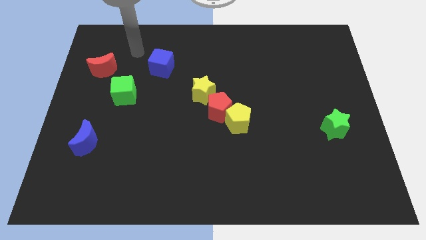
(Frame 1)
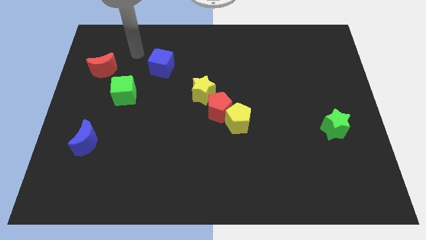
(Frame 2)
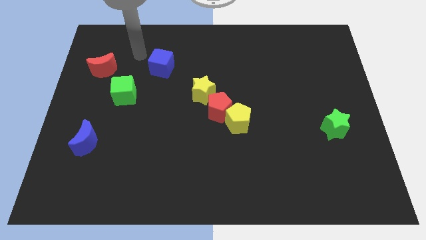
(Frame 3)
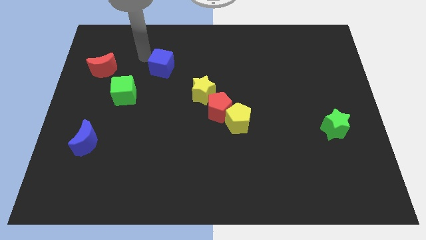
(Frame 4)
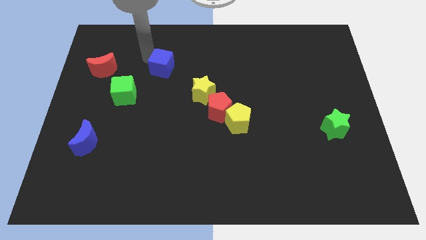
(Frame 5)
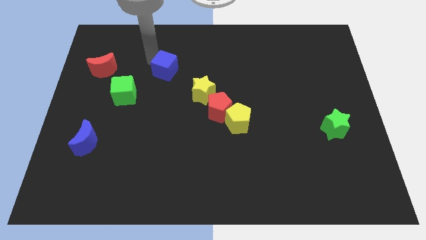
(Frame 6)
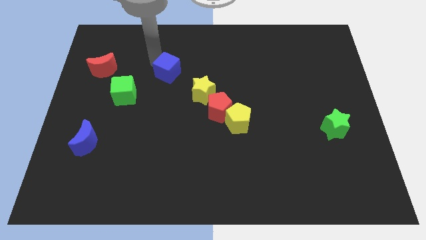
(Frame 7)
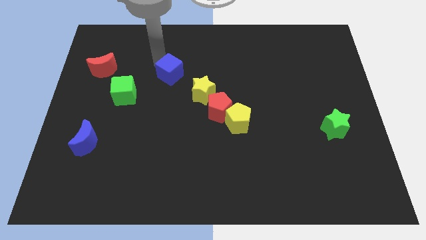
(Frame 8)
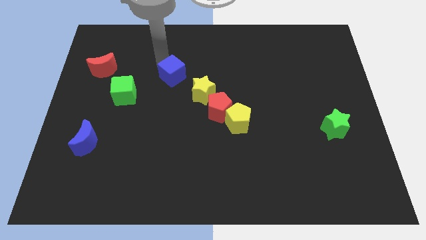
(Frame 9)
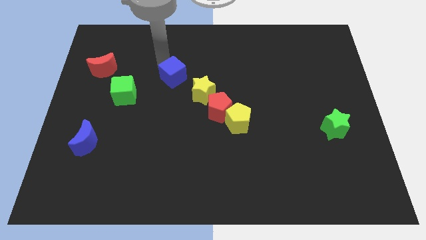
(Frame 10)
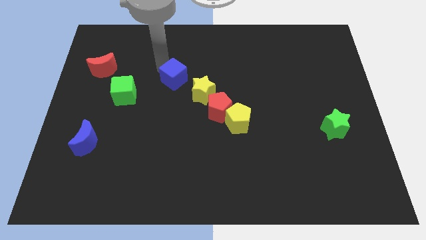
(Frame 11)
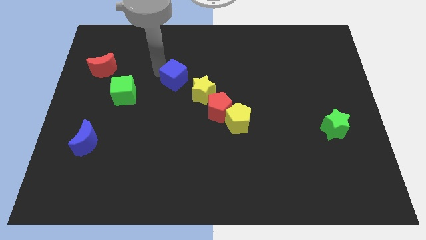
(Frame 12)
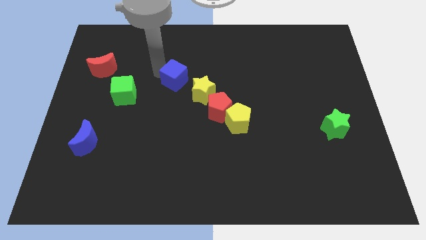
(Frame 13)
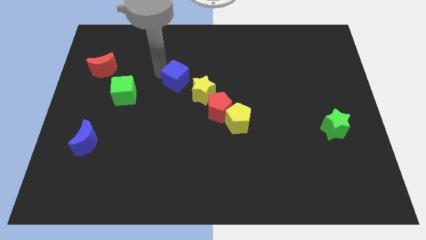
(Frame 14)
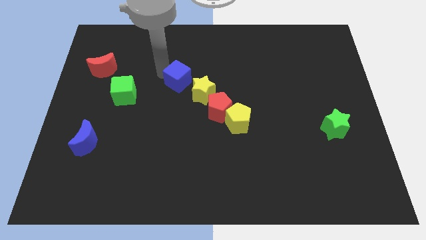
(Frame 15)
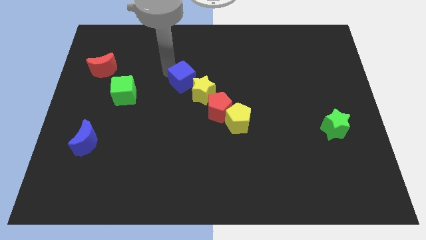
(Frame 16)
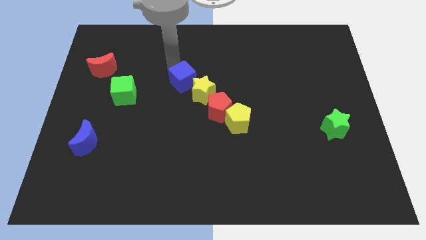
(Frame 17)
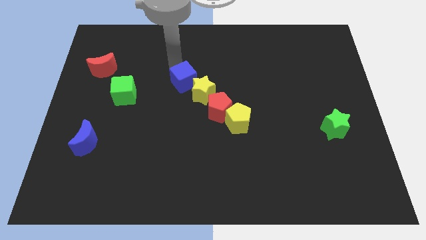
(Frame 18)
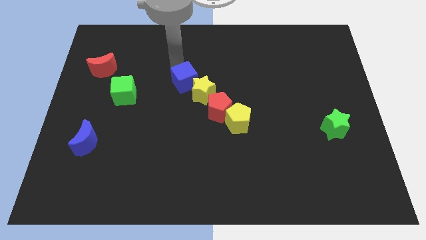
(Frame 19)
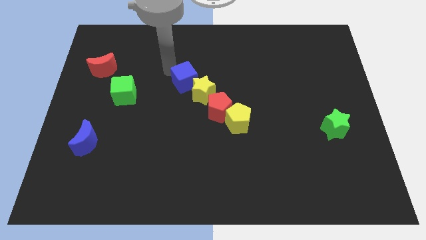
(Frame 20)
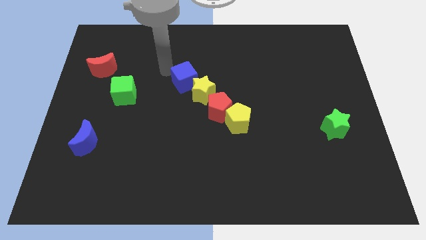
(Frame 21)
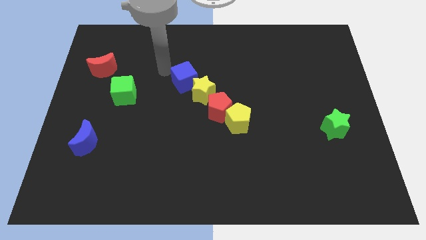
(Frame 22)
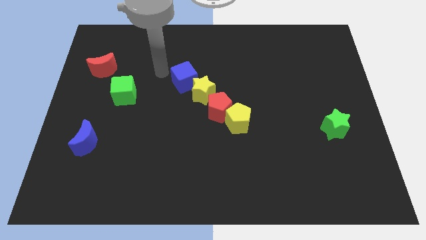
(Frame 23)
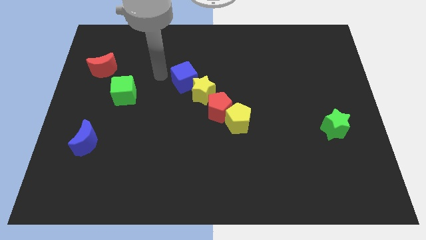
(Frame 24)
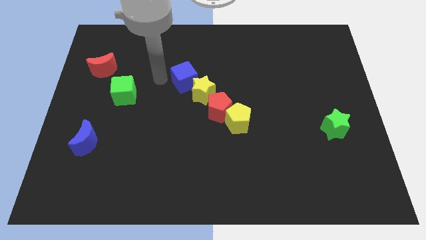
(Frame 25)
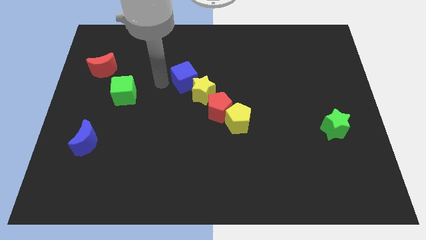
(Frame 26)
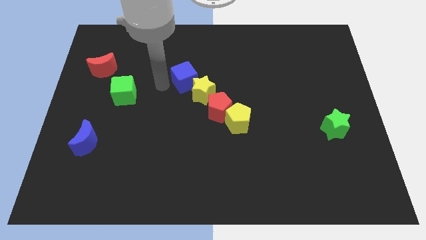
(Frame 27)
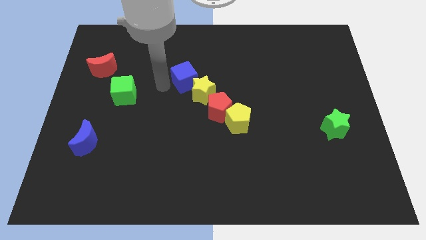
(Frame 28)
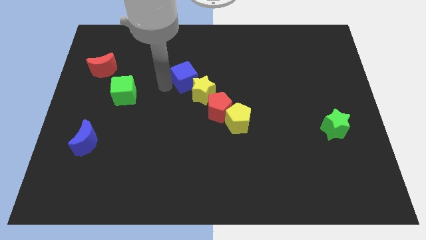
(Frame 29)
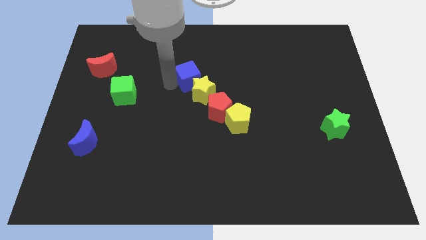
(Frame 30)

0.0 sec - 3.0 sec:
move blue cube close to yellow star

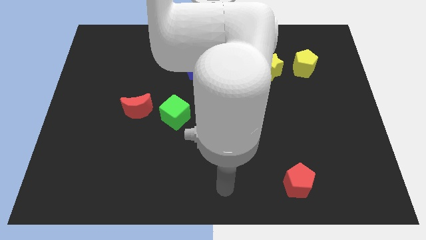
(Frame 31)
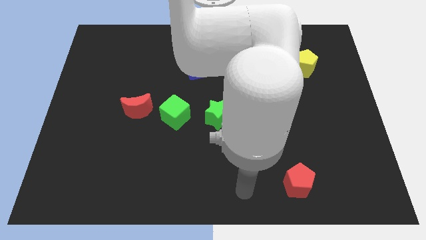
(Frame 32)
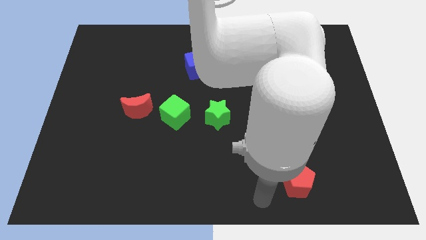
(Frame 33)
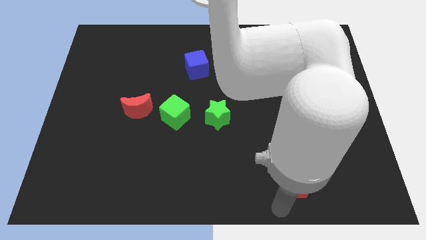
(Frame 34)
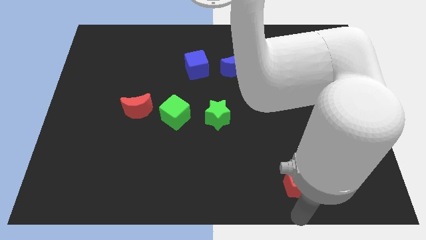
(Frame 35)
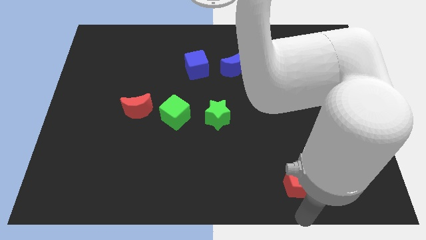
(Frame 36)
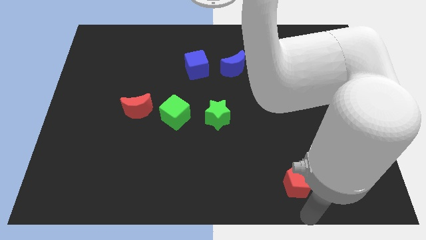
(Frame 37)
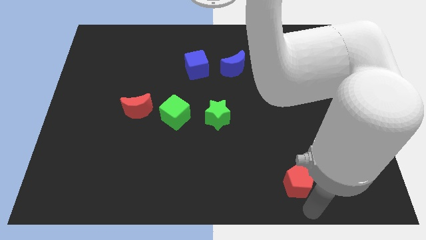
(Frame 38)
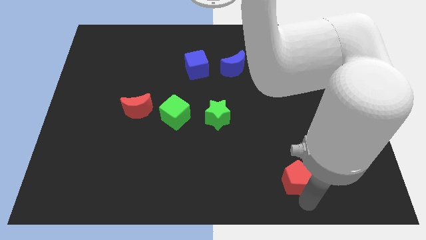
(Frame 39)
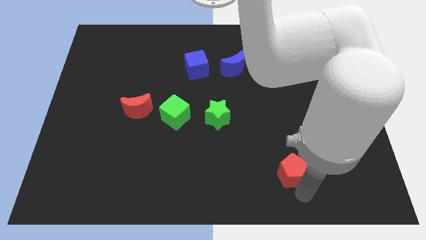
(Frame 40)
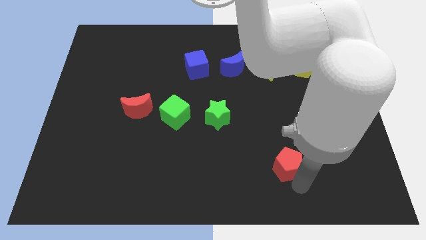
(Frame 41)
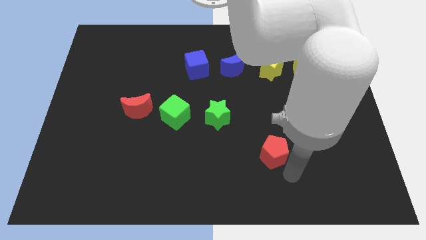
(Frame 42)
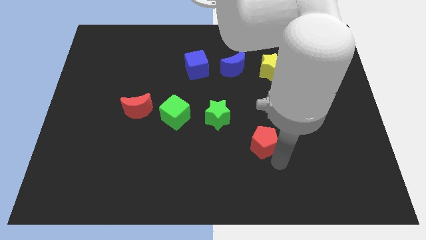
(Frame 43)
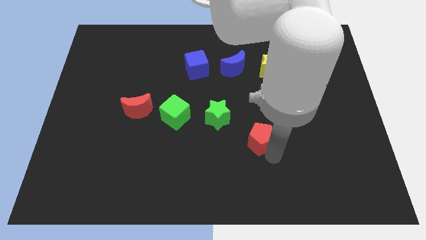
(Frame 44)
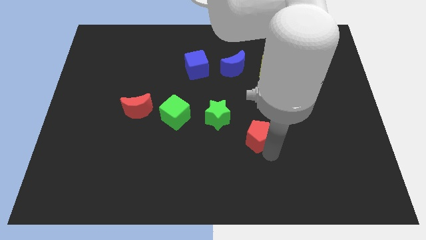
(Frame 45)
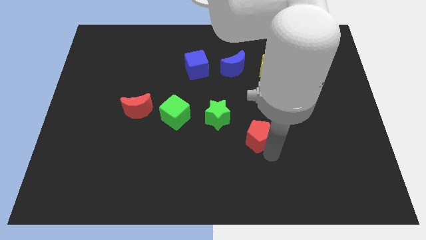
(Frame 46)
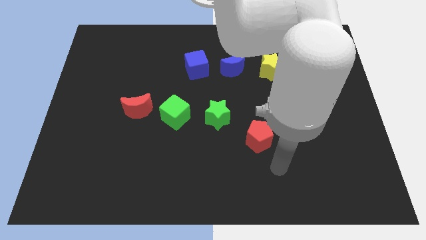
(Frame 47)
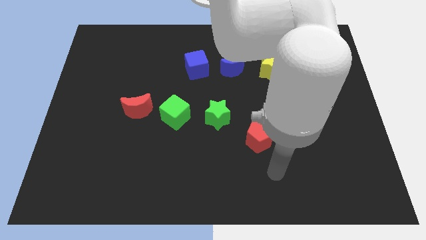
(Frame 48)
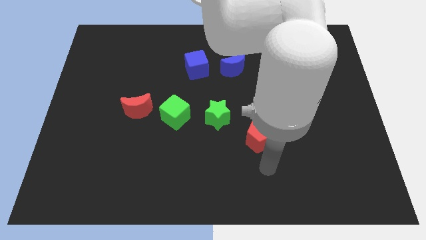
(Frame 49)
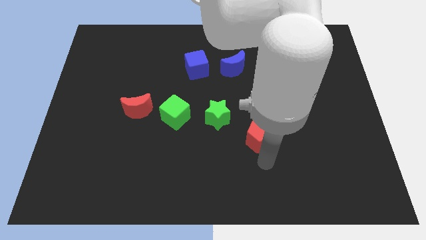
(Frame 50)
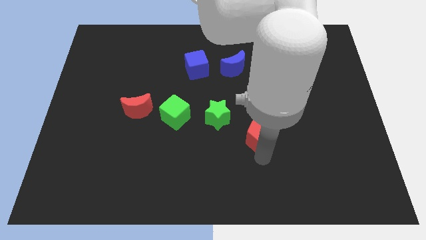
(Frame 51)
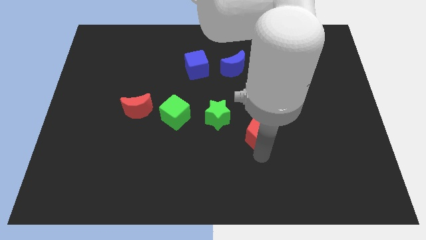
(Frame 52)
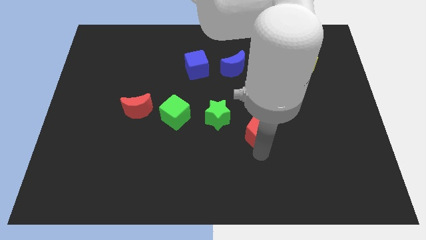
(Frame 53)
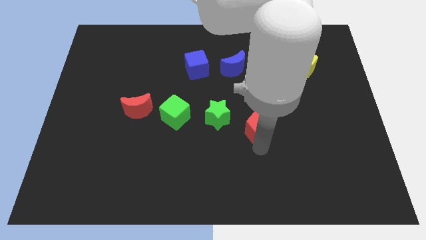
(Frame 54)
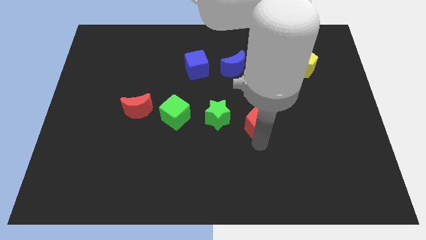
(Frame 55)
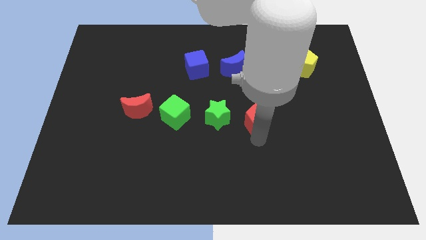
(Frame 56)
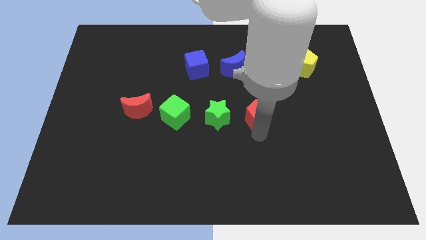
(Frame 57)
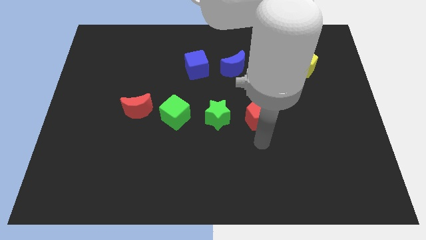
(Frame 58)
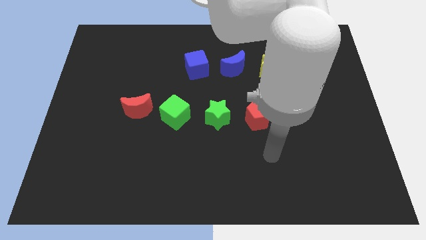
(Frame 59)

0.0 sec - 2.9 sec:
push red pentagon to the right side of green star

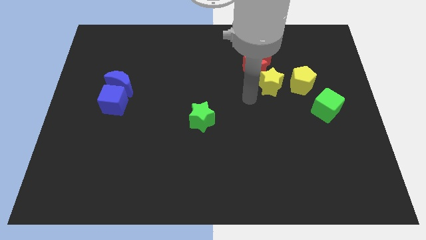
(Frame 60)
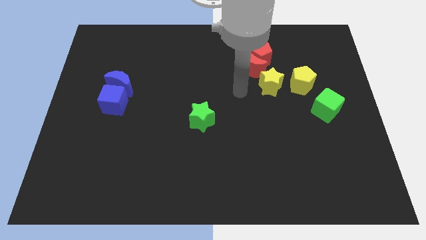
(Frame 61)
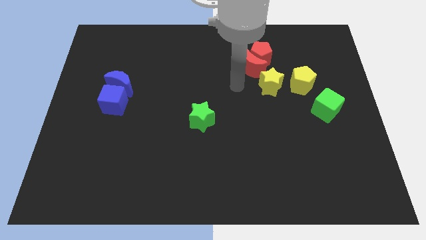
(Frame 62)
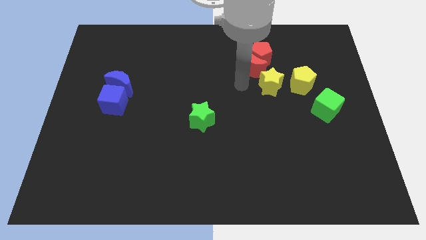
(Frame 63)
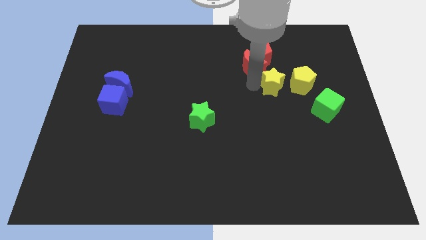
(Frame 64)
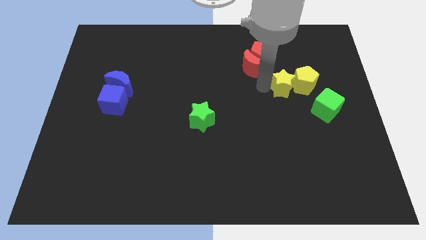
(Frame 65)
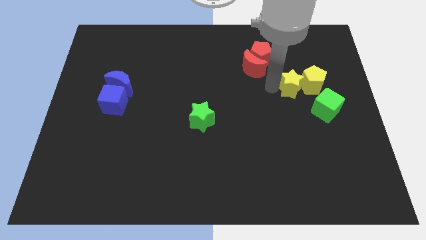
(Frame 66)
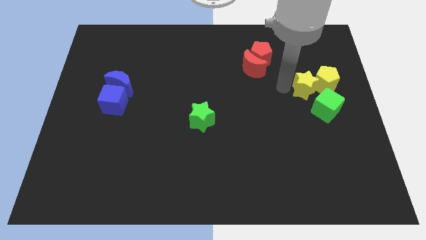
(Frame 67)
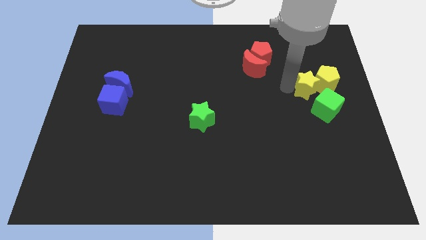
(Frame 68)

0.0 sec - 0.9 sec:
push yellow pentagon above green cube with the help of yellow star

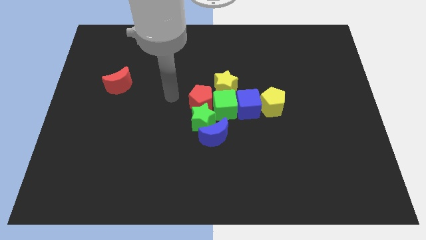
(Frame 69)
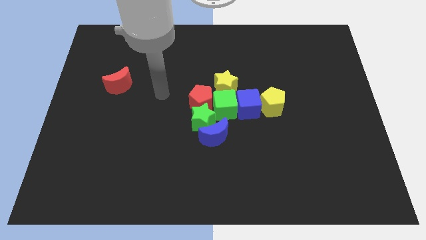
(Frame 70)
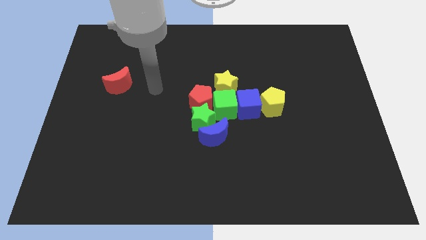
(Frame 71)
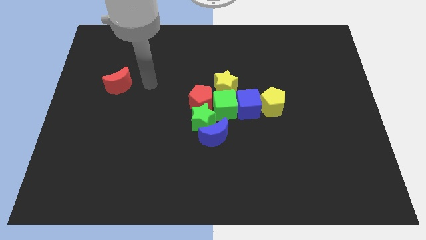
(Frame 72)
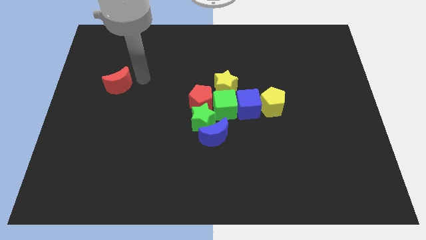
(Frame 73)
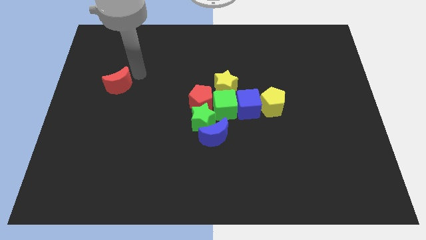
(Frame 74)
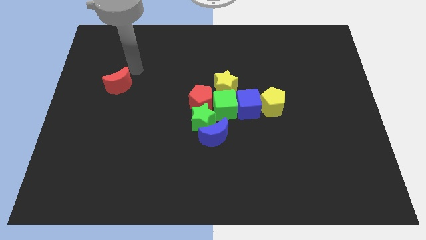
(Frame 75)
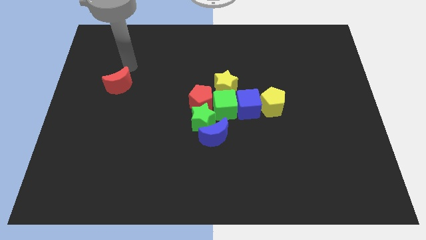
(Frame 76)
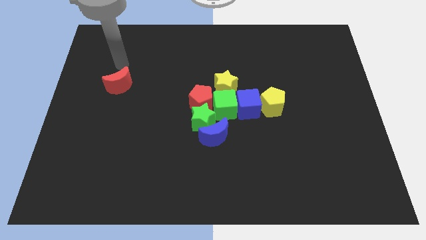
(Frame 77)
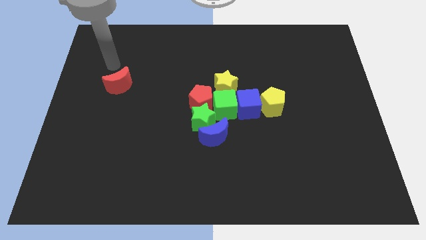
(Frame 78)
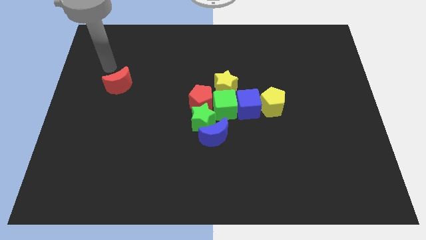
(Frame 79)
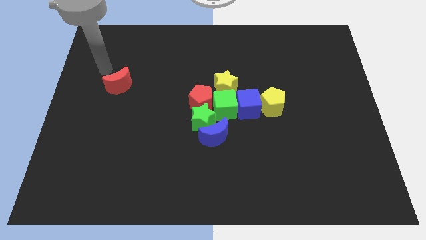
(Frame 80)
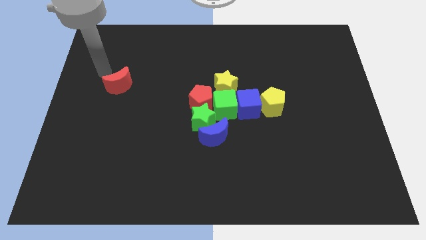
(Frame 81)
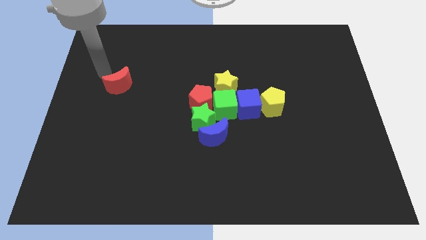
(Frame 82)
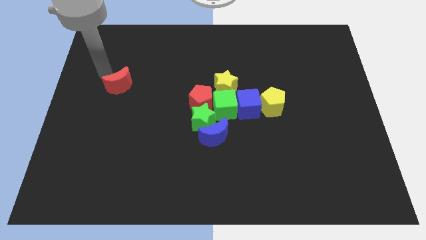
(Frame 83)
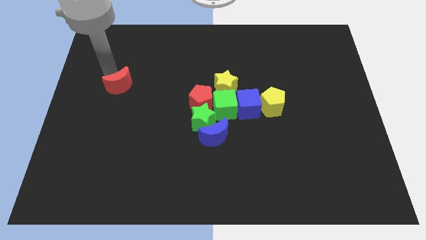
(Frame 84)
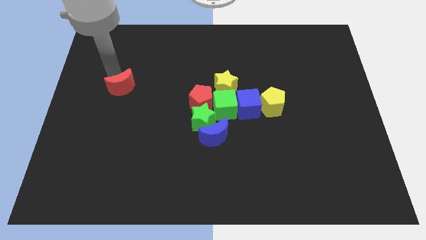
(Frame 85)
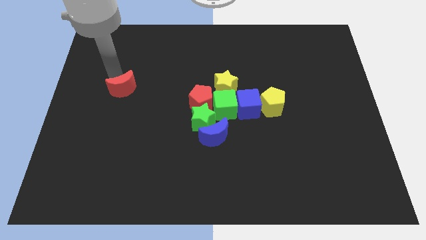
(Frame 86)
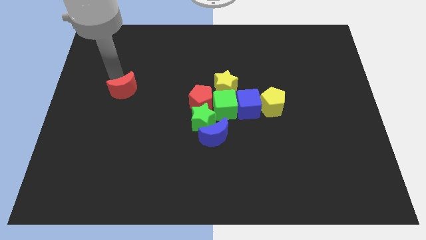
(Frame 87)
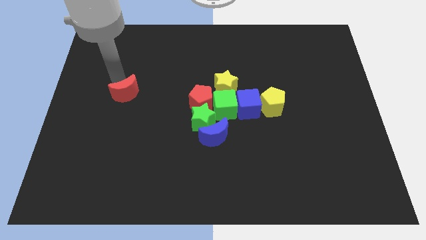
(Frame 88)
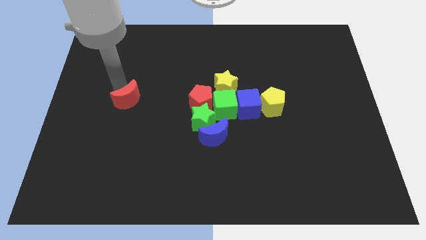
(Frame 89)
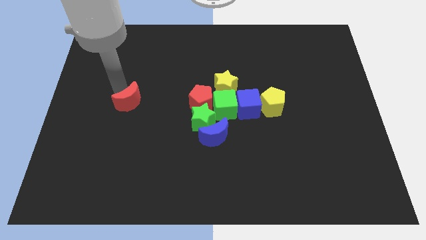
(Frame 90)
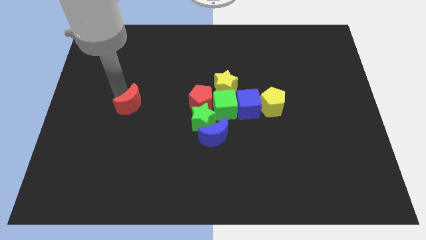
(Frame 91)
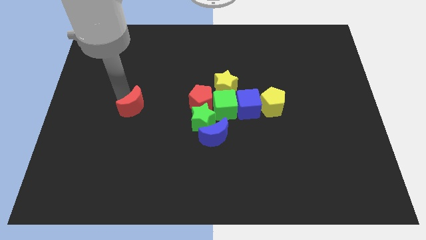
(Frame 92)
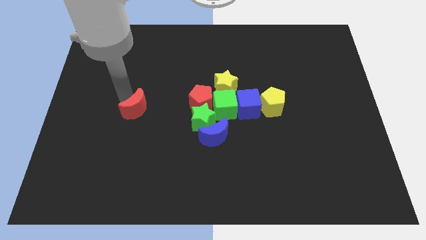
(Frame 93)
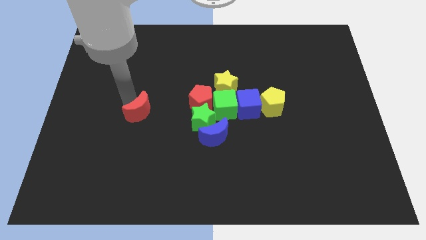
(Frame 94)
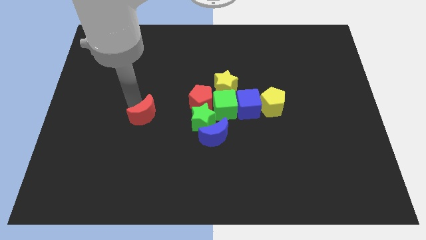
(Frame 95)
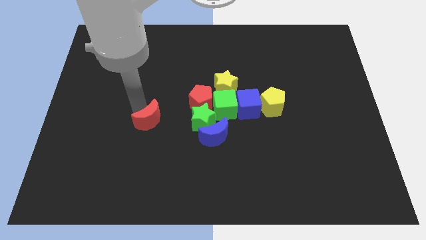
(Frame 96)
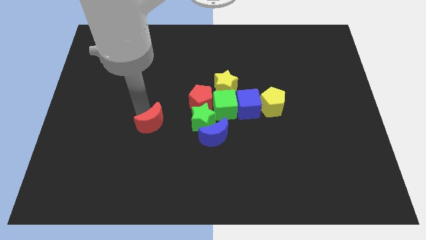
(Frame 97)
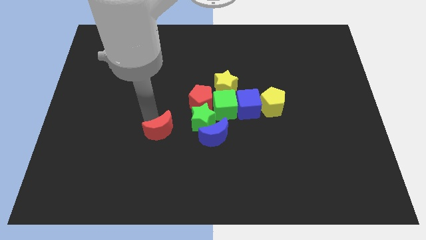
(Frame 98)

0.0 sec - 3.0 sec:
move the red crescent to the left of the green star
